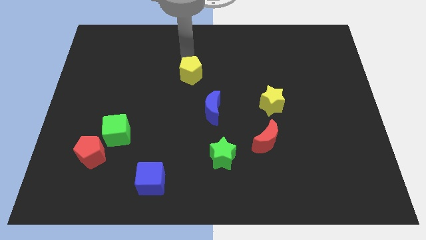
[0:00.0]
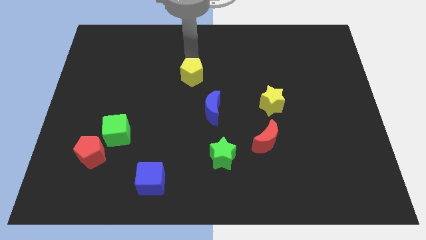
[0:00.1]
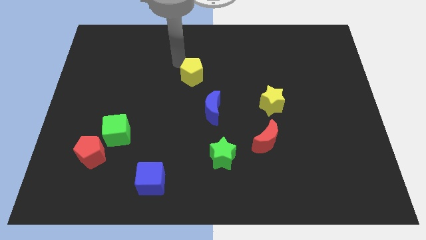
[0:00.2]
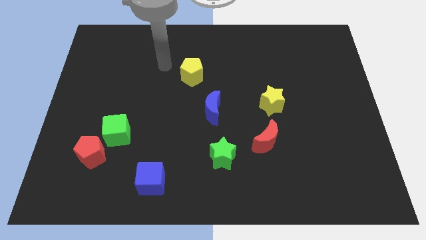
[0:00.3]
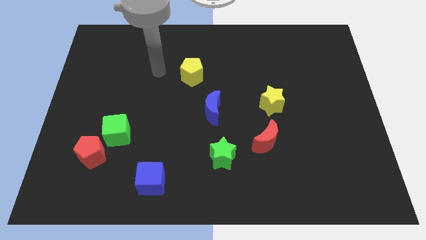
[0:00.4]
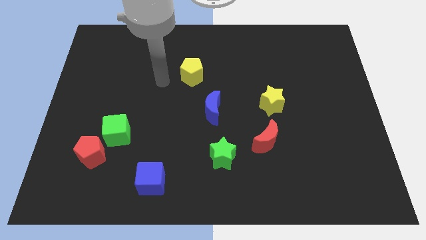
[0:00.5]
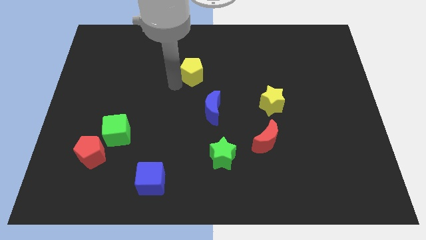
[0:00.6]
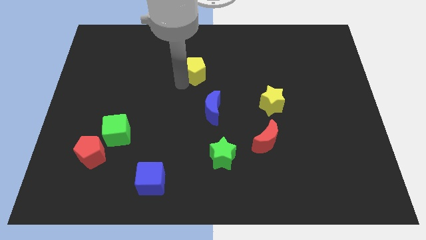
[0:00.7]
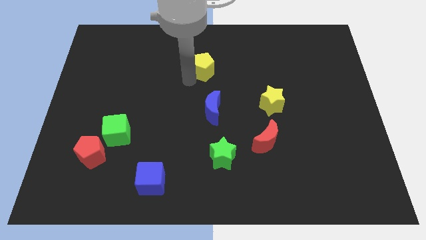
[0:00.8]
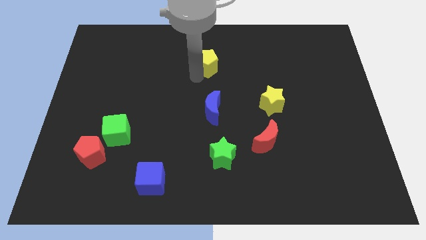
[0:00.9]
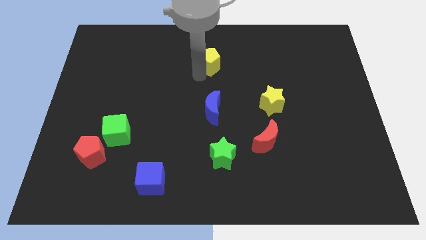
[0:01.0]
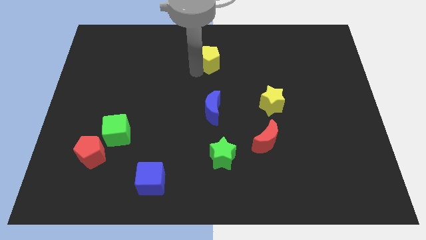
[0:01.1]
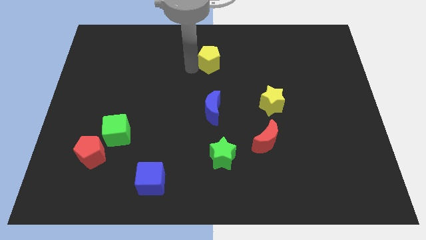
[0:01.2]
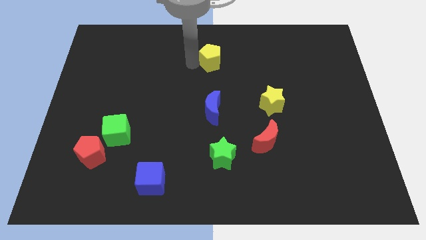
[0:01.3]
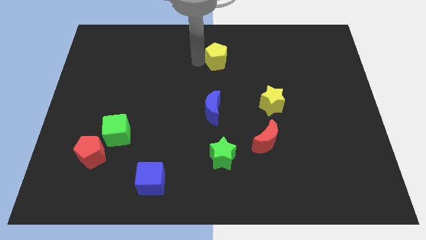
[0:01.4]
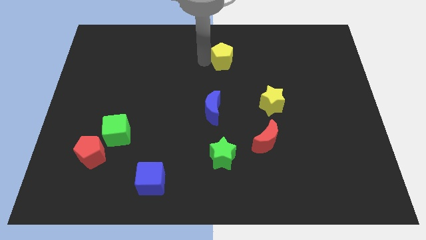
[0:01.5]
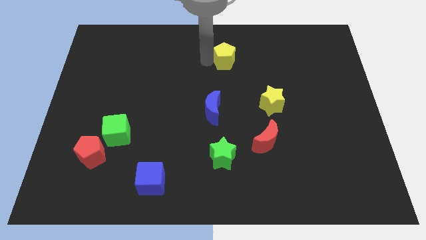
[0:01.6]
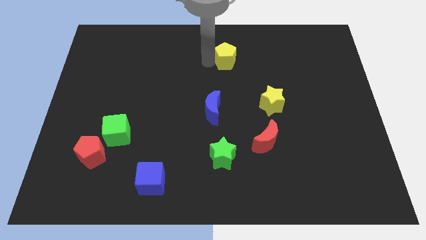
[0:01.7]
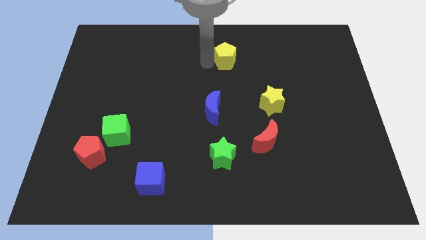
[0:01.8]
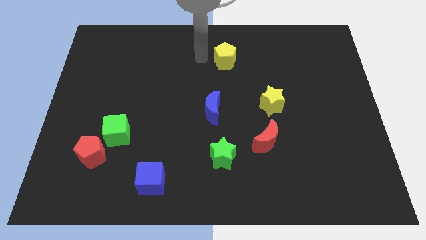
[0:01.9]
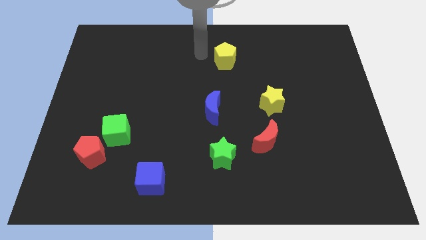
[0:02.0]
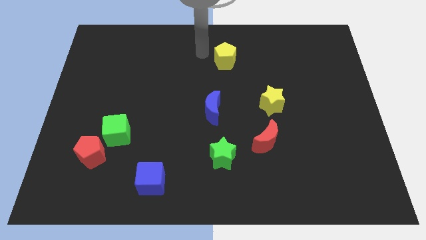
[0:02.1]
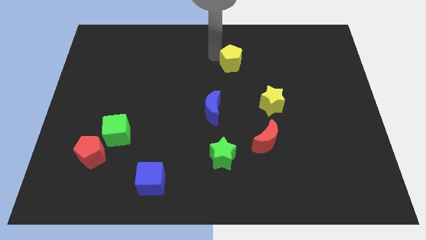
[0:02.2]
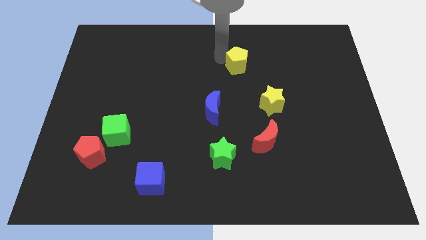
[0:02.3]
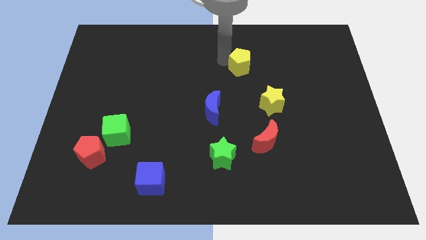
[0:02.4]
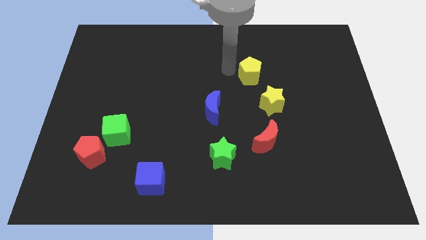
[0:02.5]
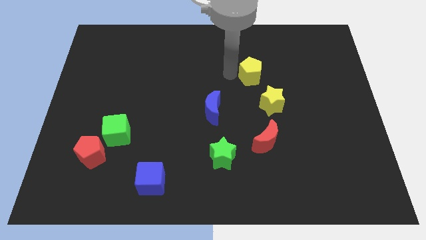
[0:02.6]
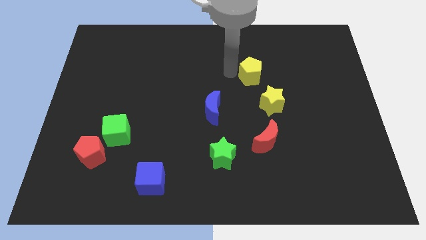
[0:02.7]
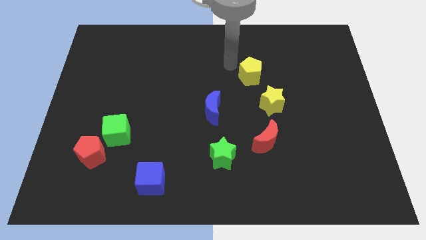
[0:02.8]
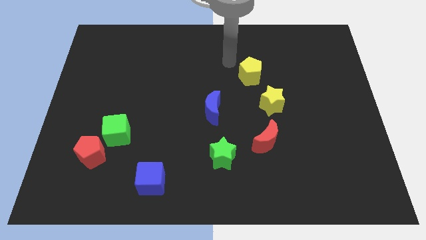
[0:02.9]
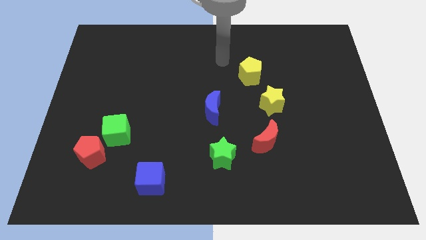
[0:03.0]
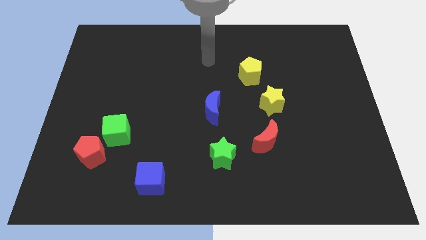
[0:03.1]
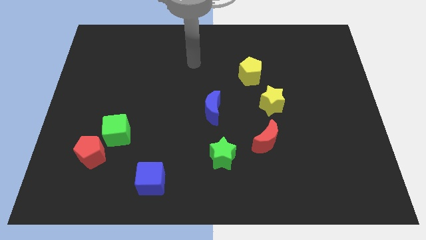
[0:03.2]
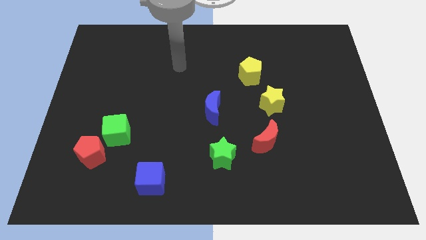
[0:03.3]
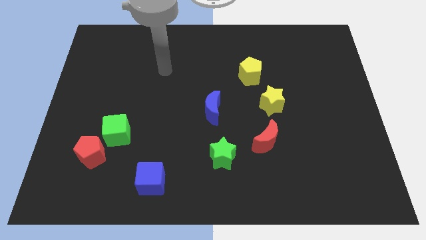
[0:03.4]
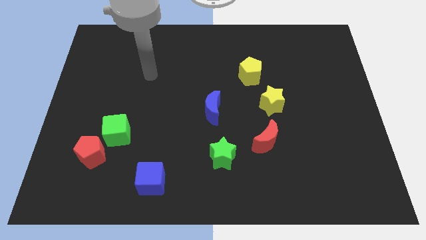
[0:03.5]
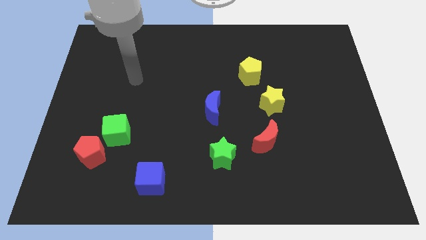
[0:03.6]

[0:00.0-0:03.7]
place the yellow pentagon above the yellow star and the blue moon to form a triangle

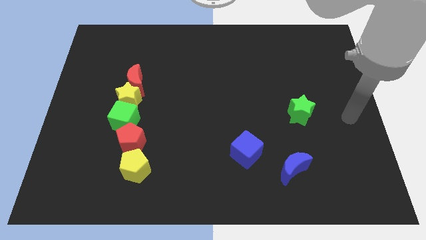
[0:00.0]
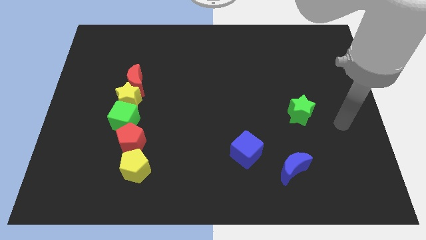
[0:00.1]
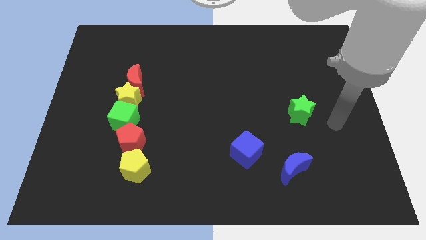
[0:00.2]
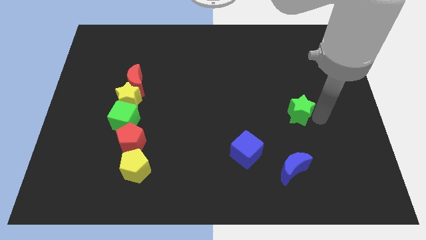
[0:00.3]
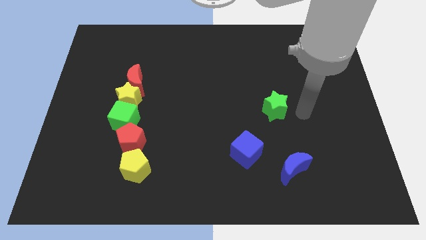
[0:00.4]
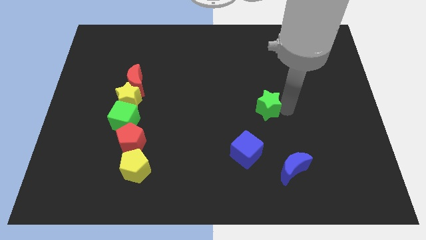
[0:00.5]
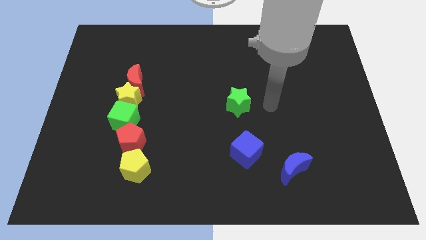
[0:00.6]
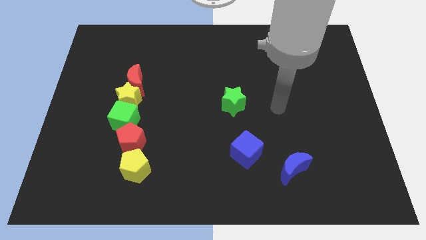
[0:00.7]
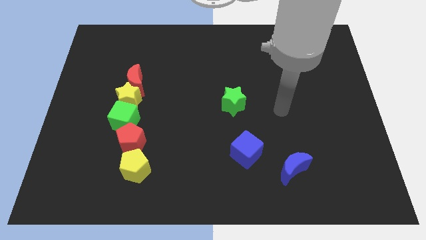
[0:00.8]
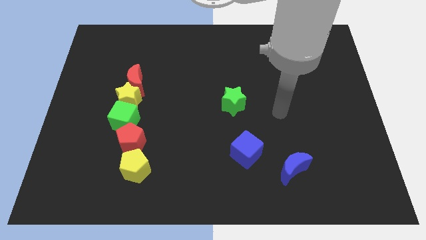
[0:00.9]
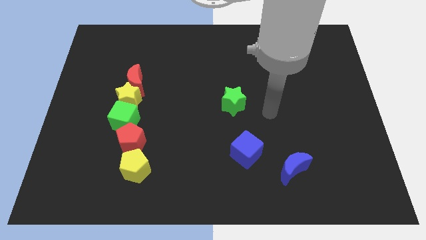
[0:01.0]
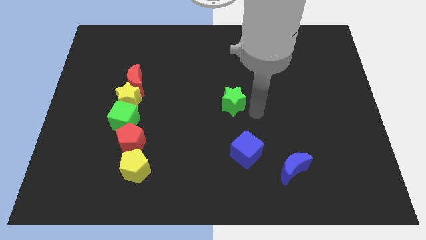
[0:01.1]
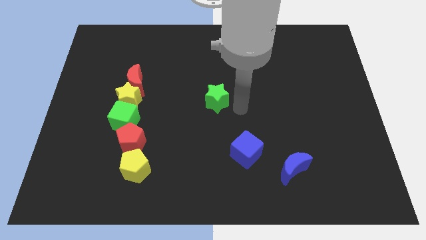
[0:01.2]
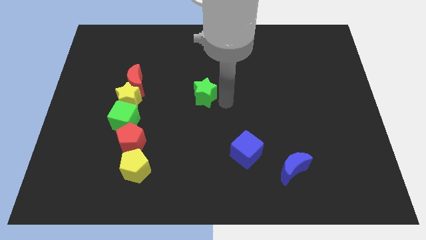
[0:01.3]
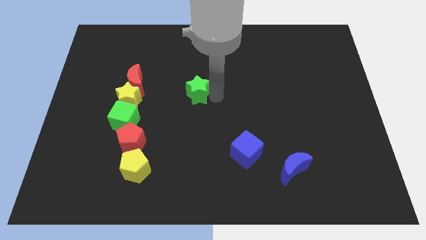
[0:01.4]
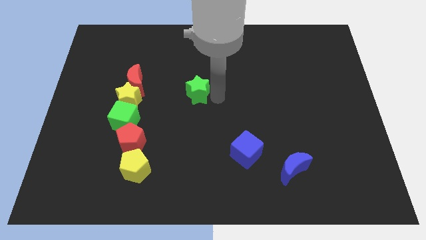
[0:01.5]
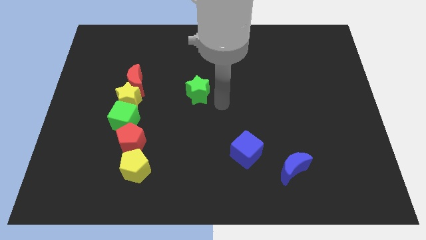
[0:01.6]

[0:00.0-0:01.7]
push the green star towards left side of board

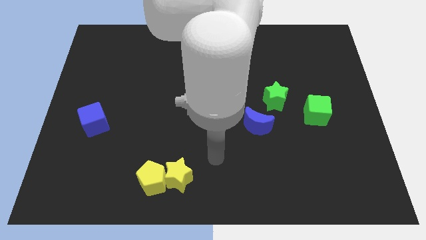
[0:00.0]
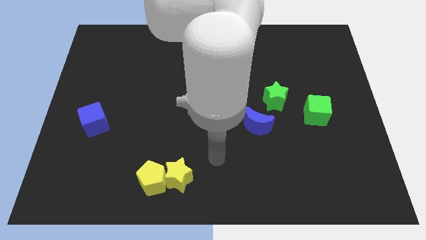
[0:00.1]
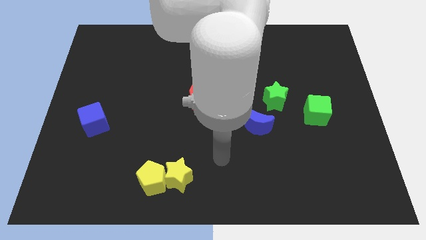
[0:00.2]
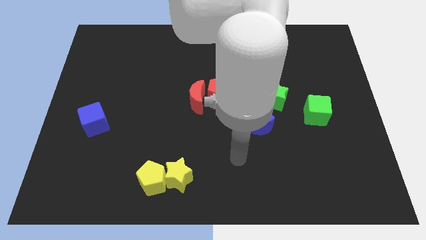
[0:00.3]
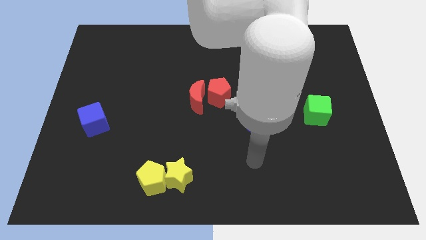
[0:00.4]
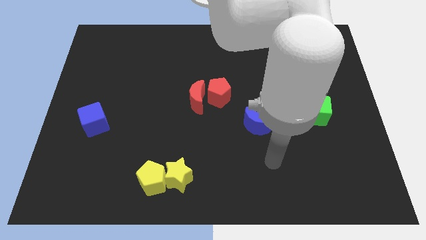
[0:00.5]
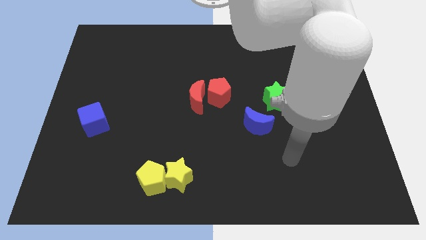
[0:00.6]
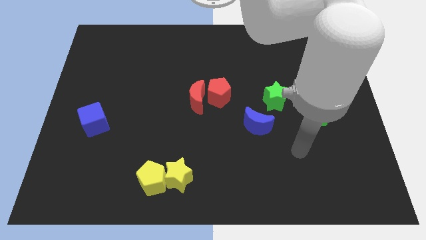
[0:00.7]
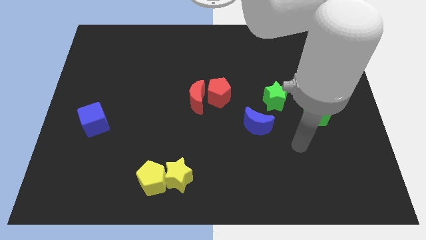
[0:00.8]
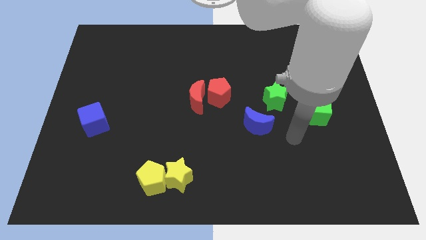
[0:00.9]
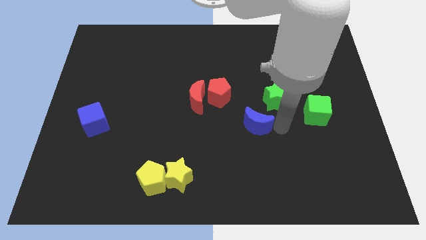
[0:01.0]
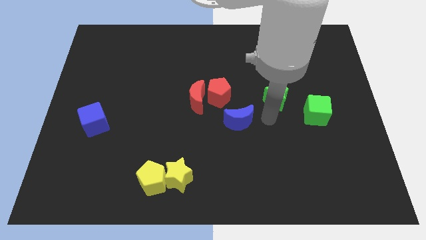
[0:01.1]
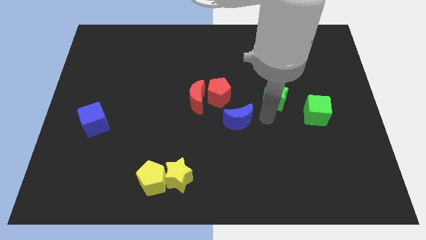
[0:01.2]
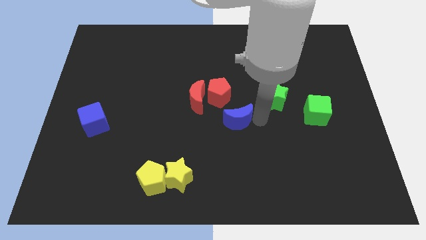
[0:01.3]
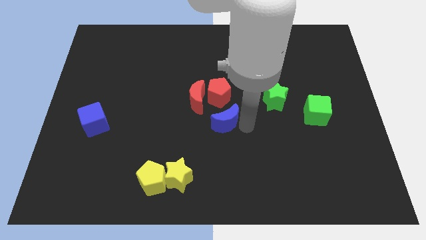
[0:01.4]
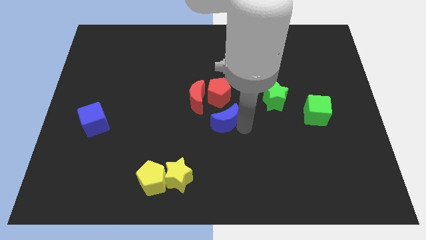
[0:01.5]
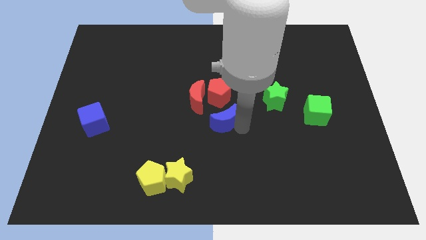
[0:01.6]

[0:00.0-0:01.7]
place the blue moon below the red pentagon

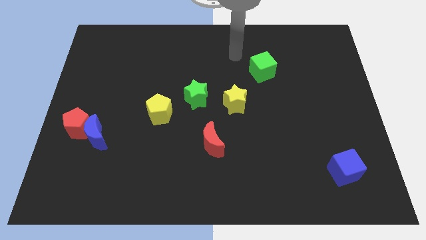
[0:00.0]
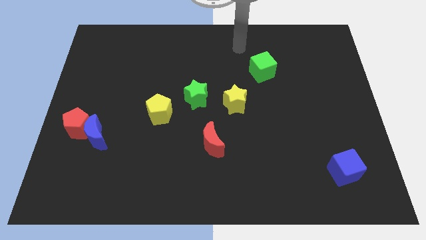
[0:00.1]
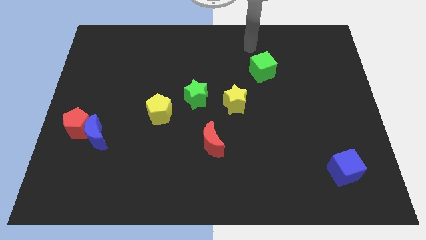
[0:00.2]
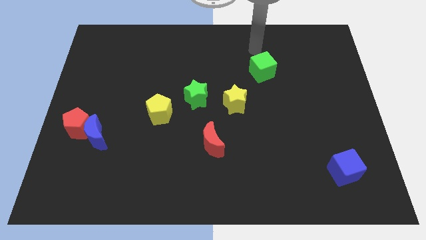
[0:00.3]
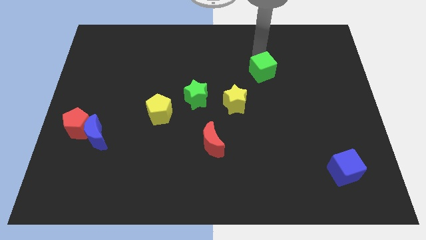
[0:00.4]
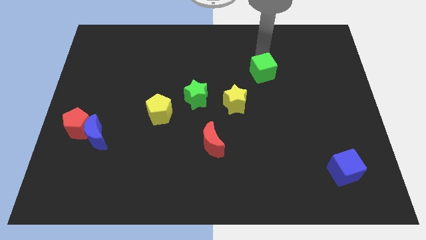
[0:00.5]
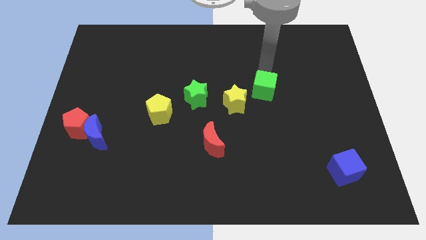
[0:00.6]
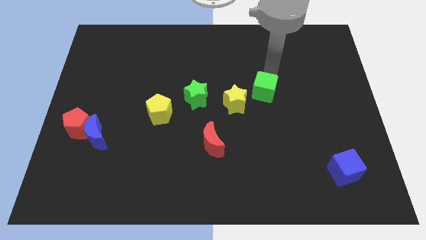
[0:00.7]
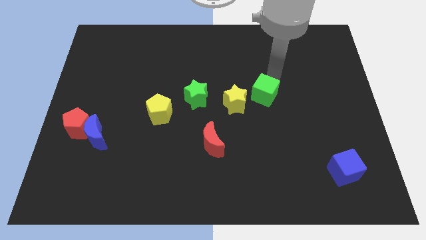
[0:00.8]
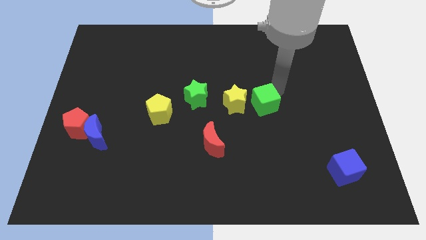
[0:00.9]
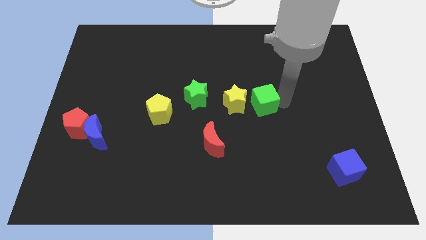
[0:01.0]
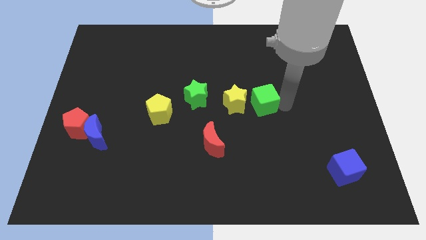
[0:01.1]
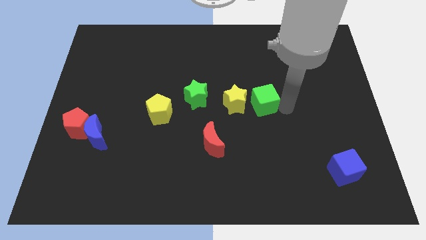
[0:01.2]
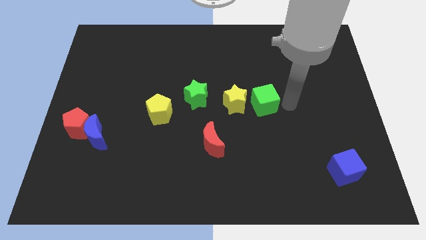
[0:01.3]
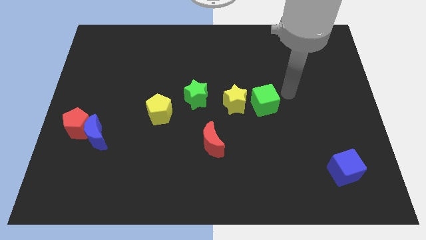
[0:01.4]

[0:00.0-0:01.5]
push the green cube to the right of the yellow star

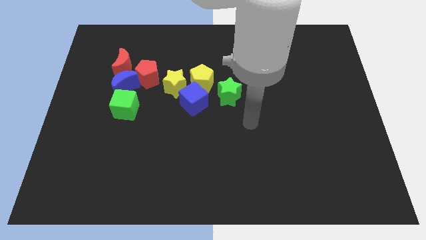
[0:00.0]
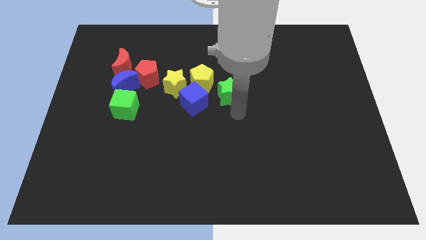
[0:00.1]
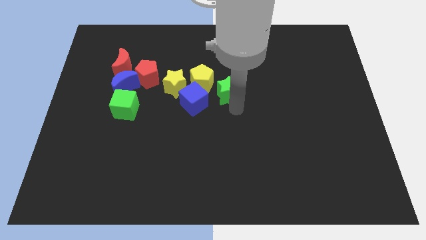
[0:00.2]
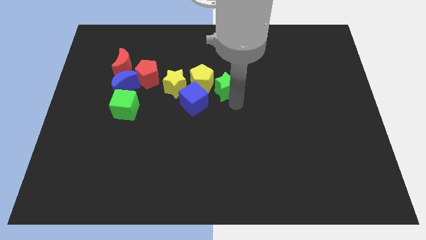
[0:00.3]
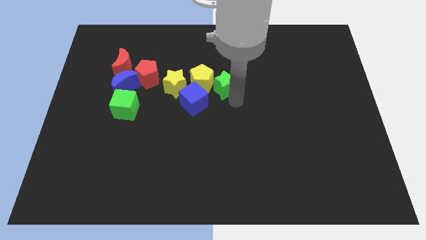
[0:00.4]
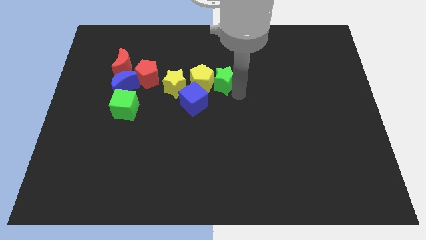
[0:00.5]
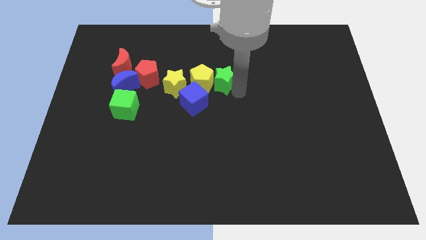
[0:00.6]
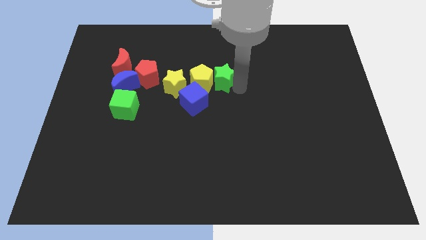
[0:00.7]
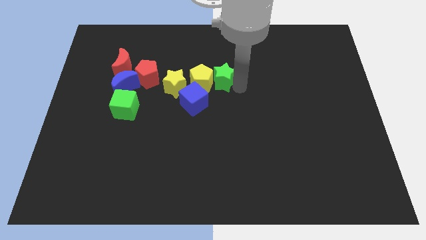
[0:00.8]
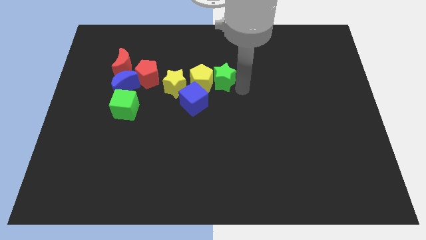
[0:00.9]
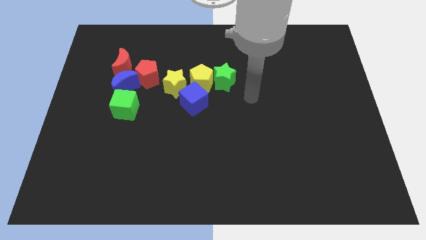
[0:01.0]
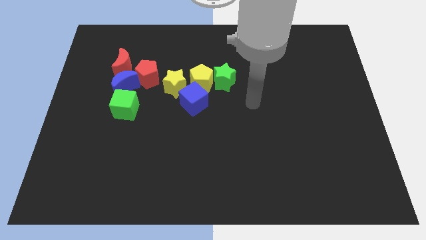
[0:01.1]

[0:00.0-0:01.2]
push green star to the right of the yellow pentagon
